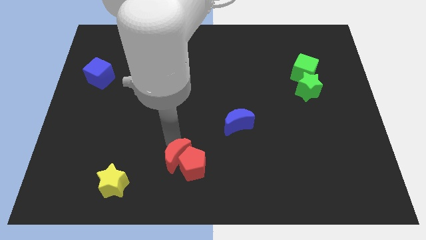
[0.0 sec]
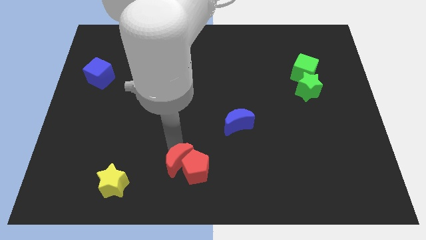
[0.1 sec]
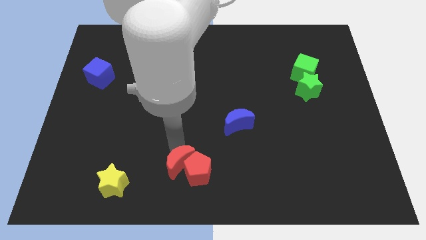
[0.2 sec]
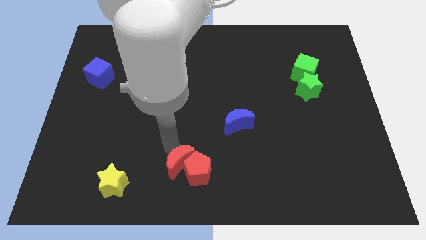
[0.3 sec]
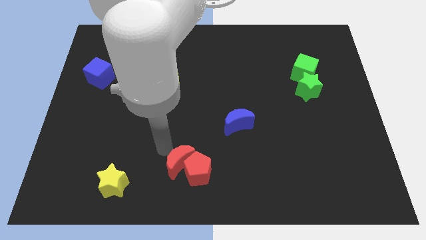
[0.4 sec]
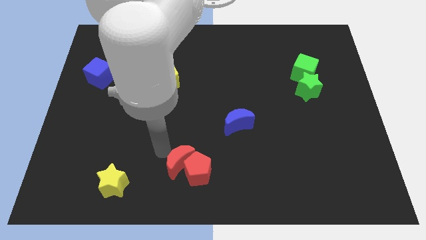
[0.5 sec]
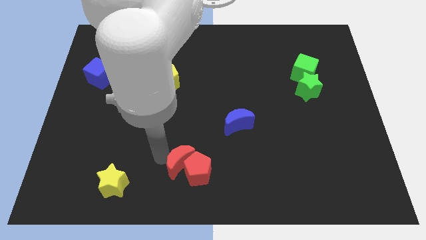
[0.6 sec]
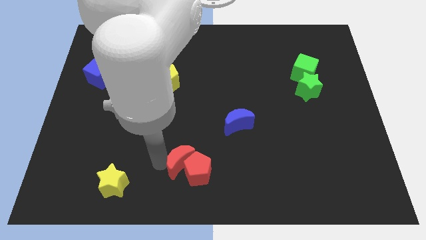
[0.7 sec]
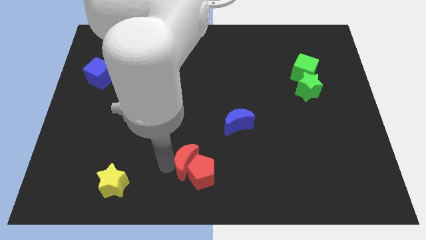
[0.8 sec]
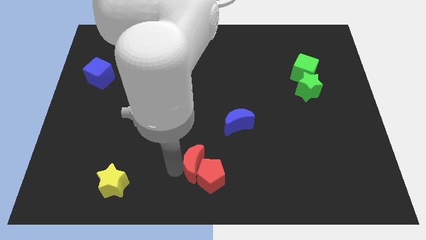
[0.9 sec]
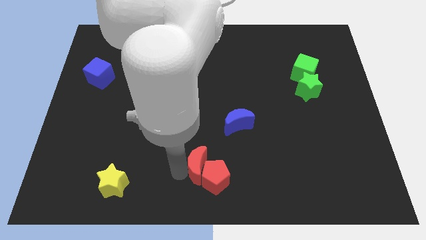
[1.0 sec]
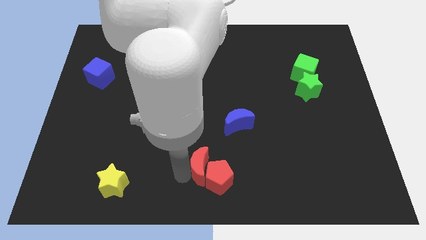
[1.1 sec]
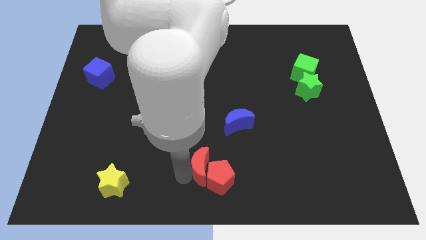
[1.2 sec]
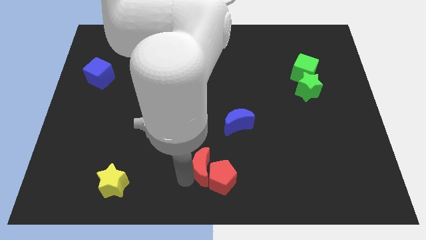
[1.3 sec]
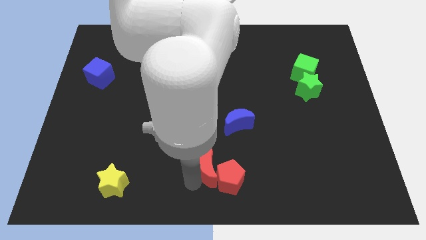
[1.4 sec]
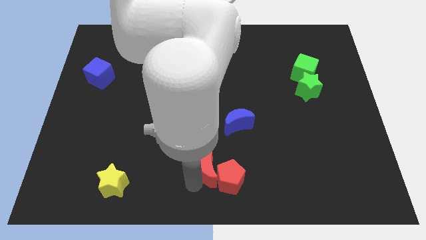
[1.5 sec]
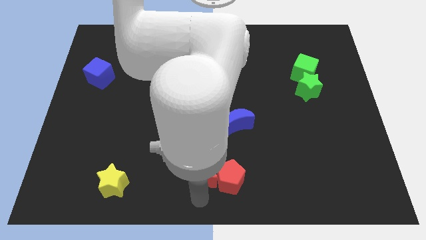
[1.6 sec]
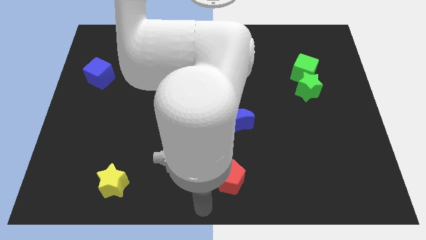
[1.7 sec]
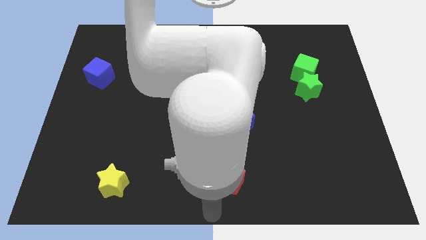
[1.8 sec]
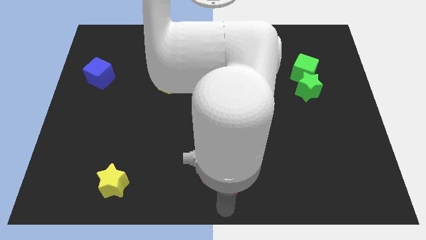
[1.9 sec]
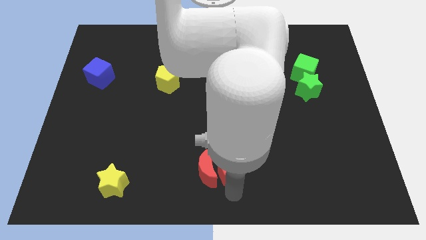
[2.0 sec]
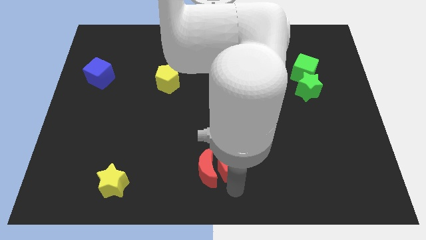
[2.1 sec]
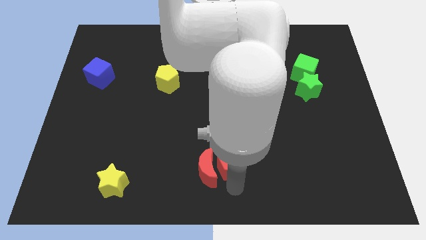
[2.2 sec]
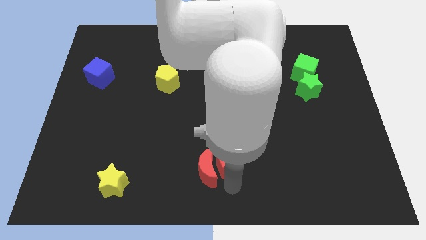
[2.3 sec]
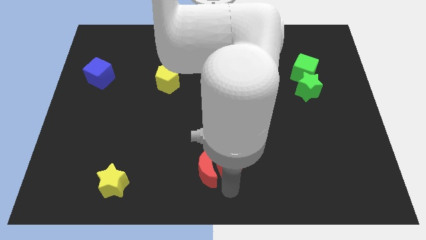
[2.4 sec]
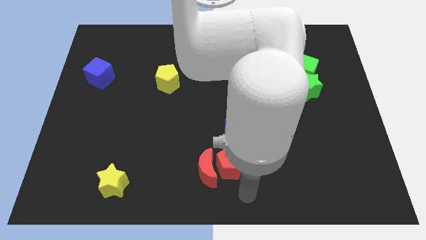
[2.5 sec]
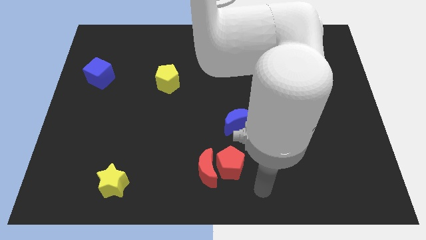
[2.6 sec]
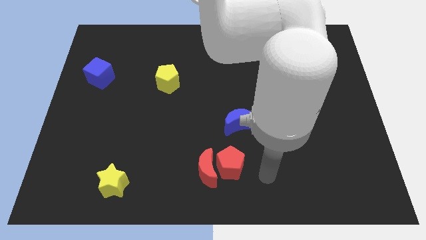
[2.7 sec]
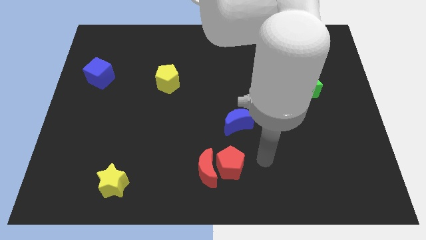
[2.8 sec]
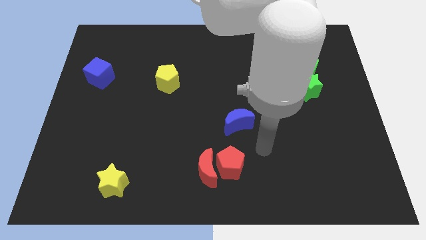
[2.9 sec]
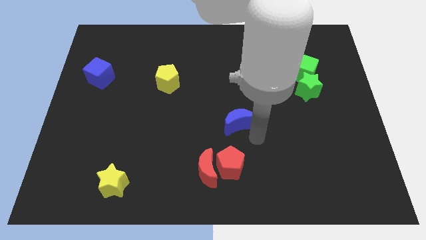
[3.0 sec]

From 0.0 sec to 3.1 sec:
slightly move the group of red blocks to the right

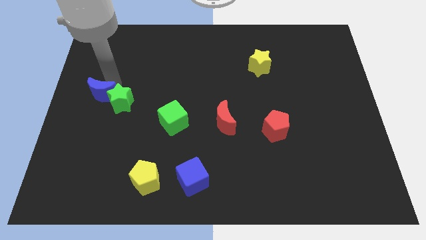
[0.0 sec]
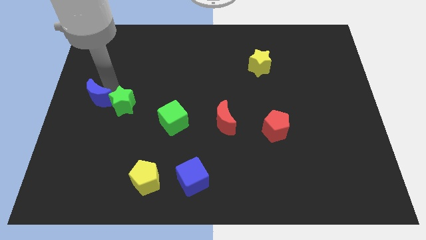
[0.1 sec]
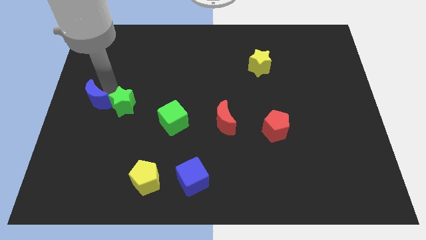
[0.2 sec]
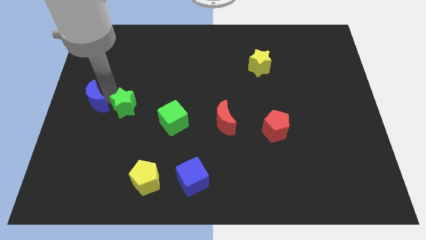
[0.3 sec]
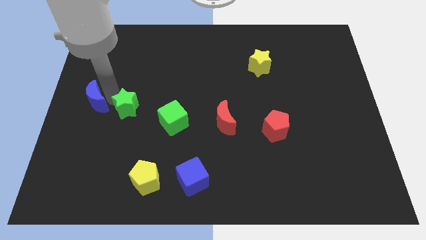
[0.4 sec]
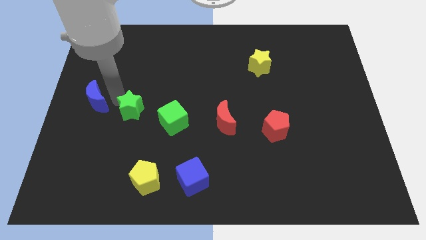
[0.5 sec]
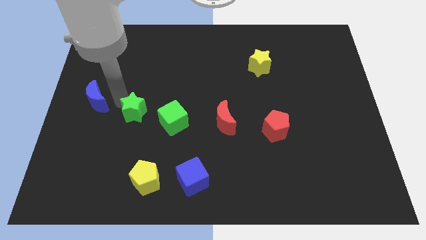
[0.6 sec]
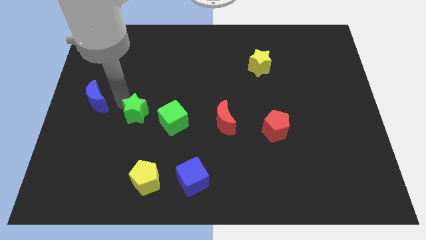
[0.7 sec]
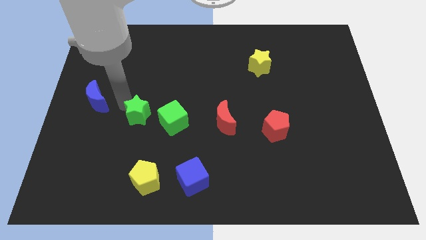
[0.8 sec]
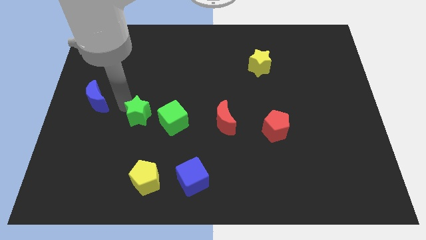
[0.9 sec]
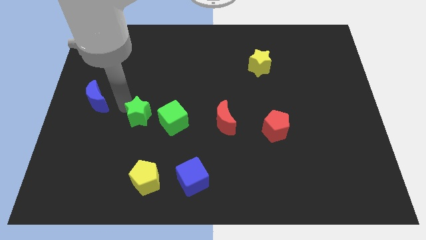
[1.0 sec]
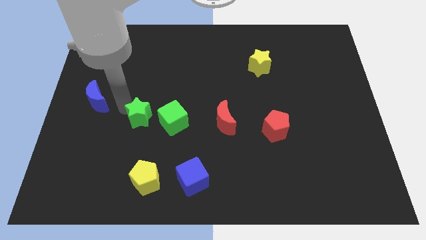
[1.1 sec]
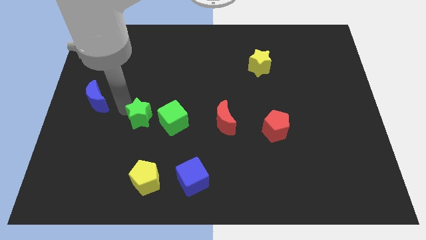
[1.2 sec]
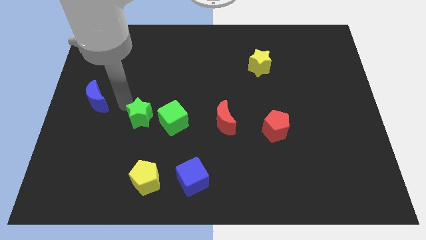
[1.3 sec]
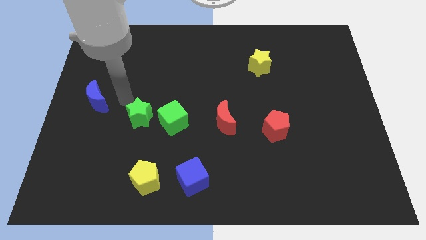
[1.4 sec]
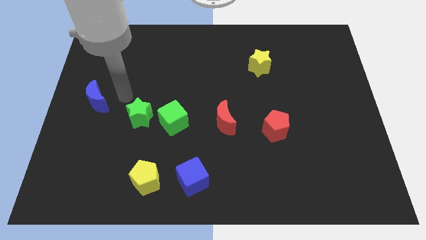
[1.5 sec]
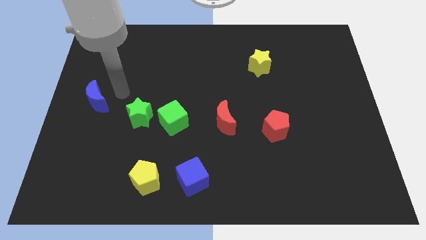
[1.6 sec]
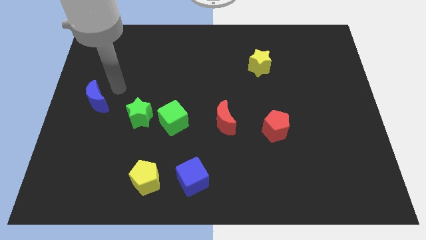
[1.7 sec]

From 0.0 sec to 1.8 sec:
push the green star to the left of the green cube

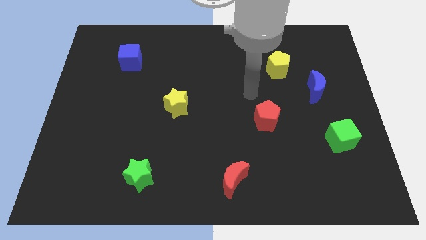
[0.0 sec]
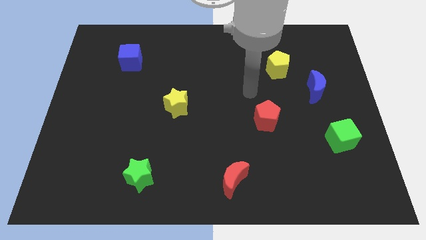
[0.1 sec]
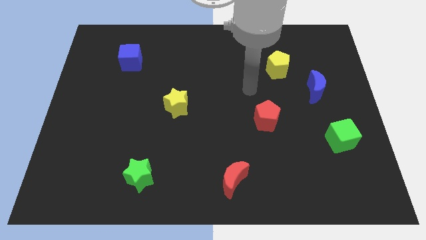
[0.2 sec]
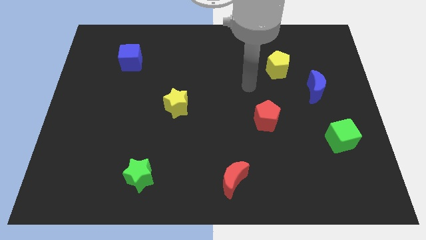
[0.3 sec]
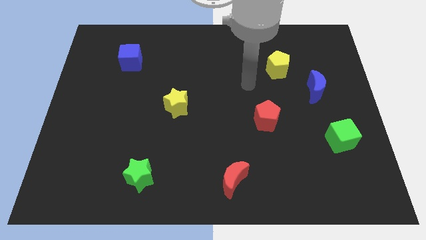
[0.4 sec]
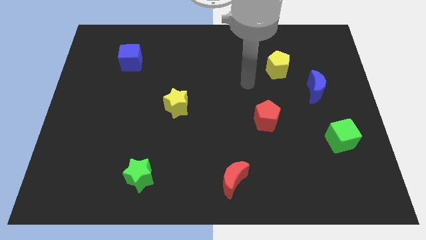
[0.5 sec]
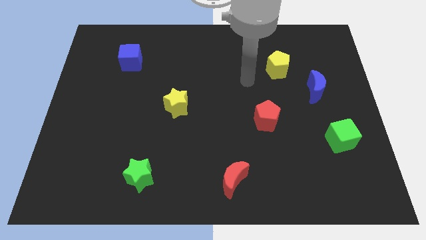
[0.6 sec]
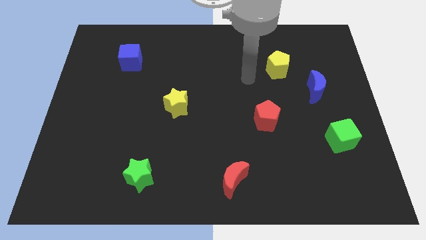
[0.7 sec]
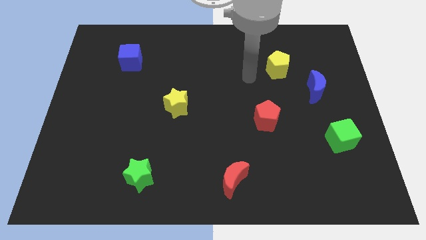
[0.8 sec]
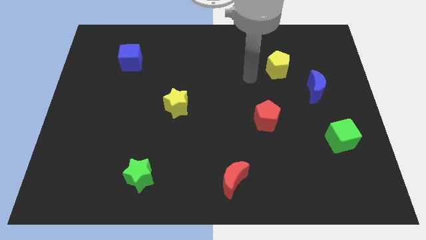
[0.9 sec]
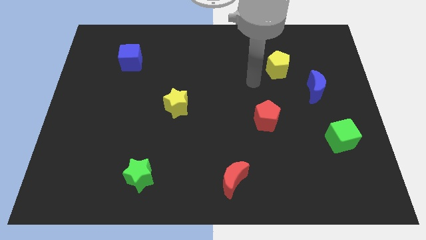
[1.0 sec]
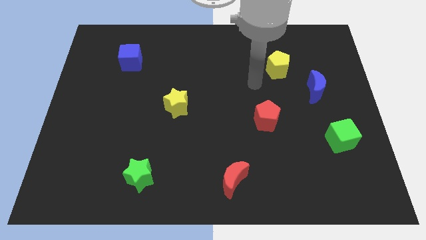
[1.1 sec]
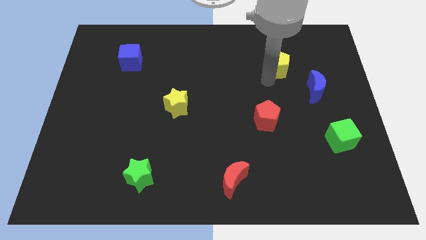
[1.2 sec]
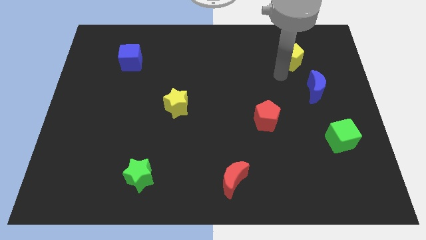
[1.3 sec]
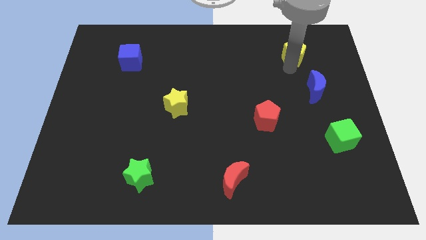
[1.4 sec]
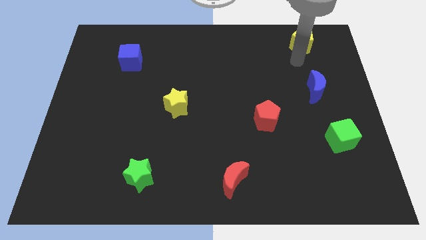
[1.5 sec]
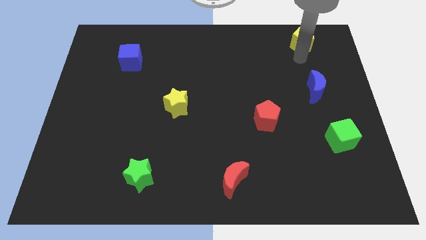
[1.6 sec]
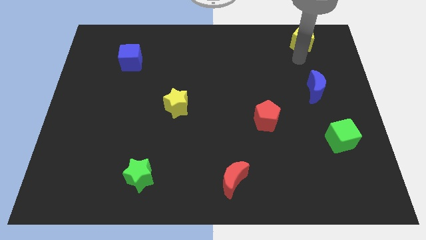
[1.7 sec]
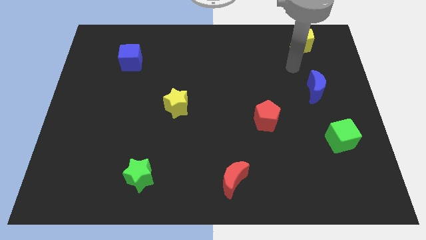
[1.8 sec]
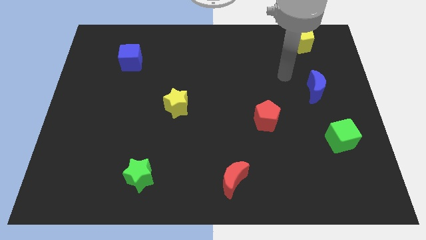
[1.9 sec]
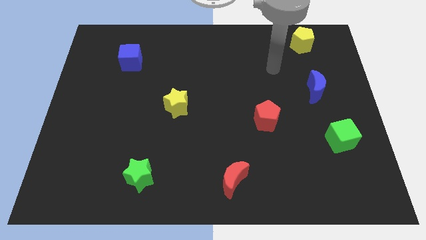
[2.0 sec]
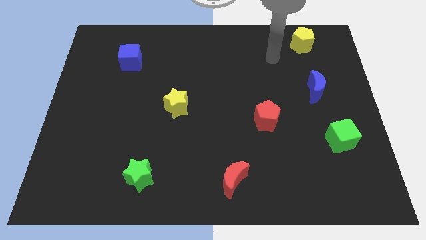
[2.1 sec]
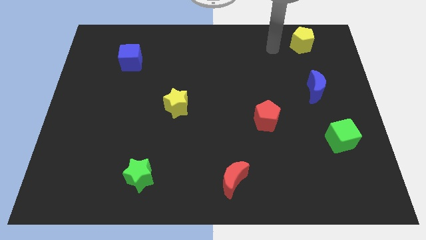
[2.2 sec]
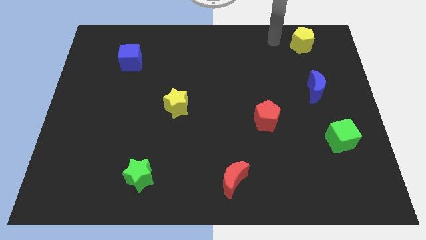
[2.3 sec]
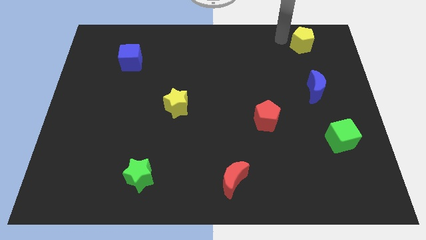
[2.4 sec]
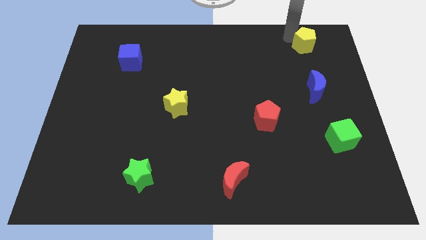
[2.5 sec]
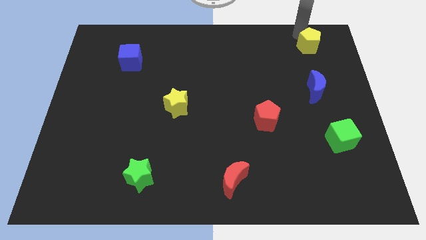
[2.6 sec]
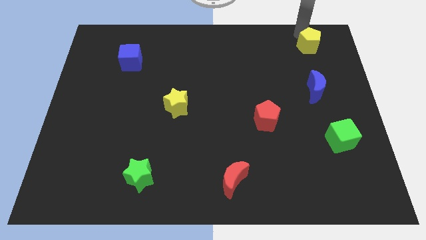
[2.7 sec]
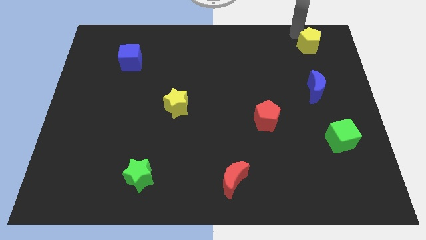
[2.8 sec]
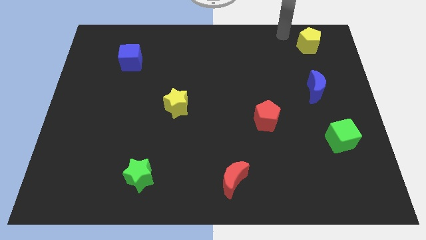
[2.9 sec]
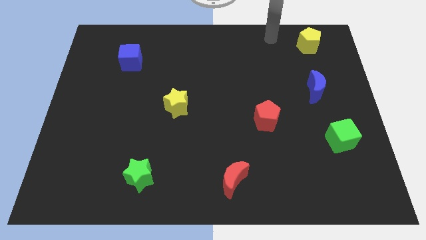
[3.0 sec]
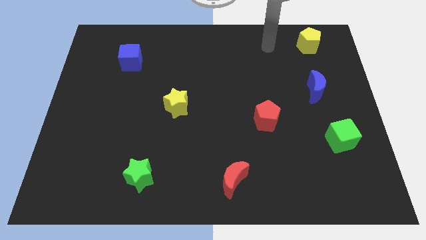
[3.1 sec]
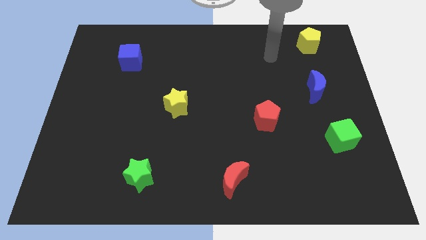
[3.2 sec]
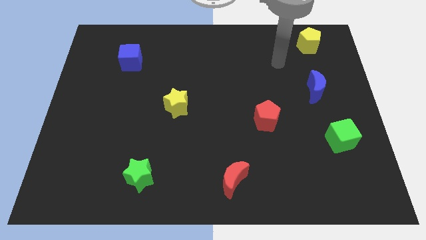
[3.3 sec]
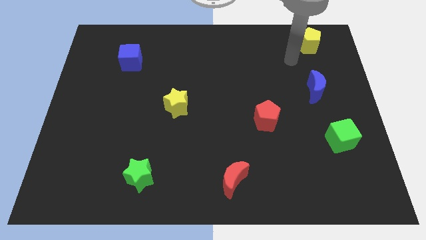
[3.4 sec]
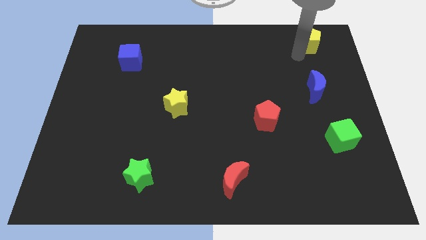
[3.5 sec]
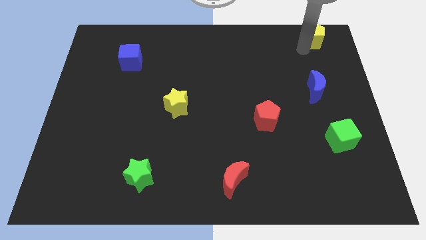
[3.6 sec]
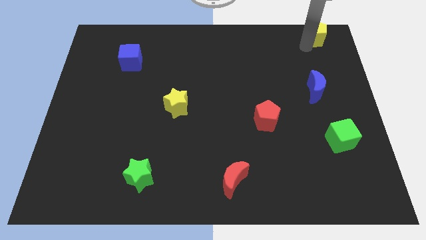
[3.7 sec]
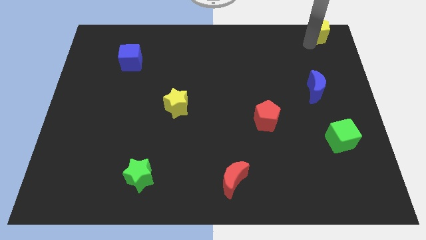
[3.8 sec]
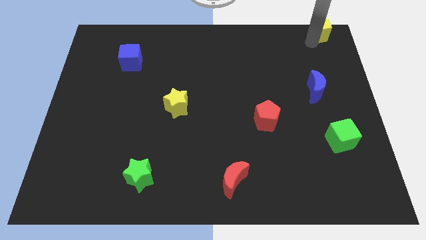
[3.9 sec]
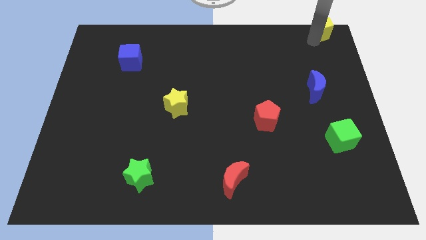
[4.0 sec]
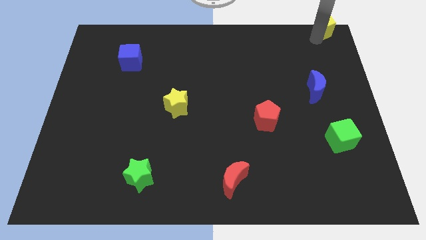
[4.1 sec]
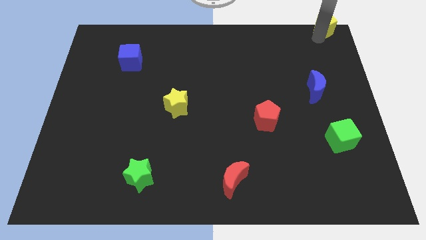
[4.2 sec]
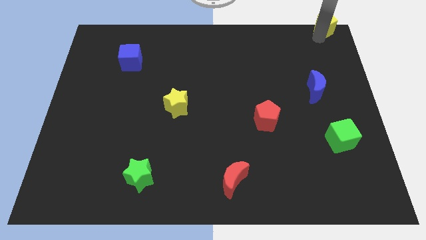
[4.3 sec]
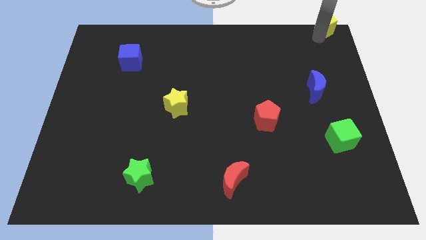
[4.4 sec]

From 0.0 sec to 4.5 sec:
place the yellow pentagon to the top right of the board
